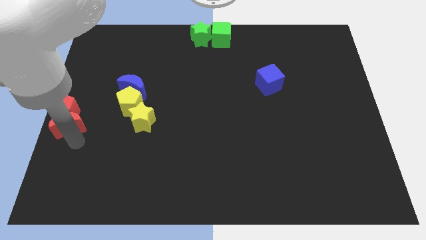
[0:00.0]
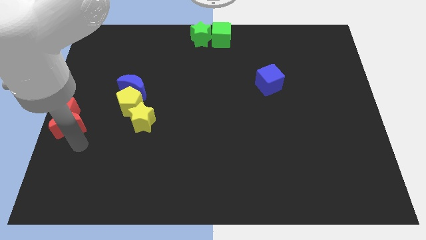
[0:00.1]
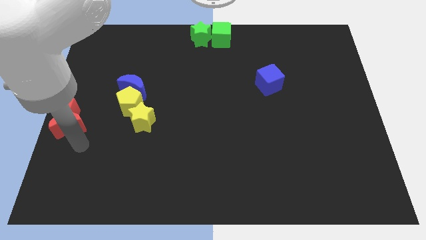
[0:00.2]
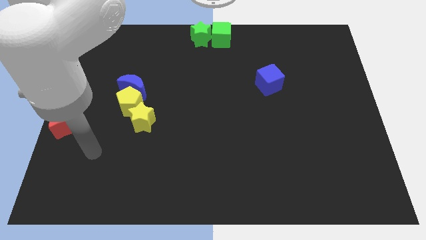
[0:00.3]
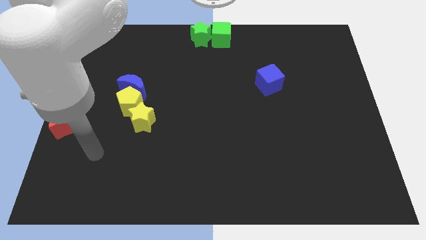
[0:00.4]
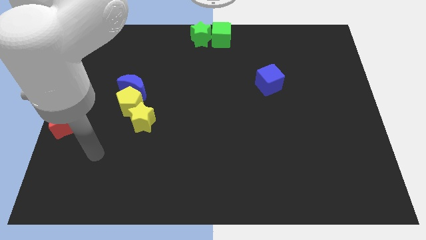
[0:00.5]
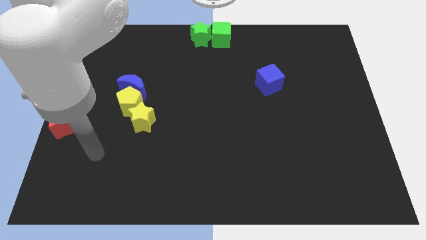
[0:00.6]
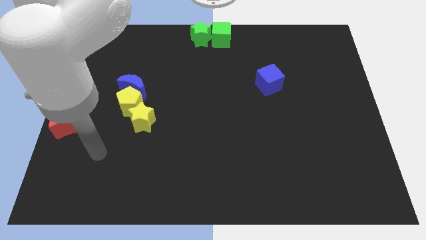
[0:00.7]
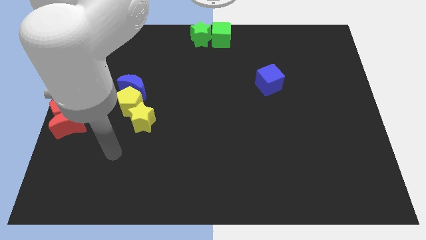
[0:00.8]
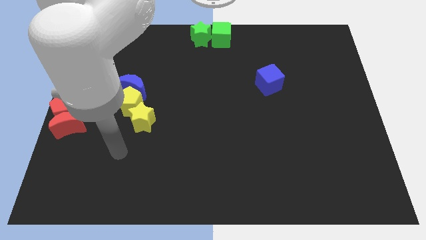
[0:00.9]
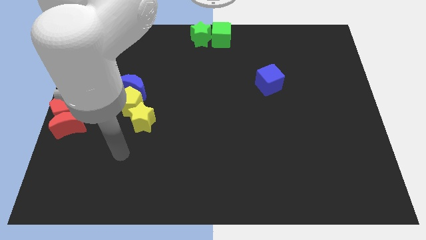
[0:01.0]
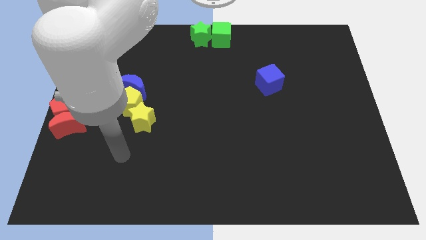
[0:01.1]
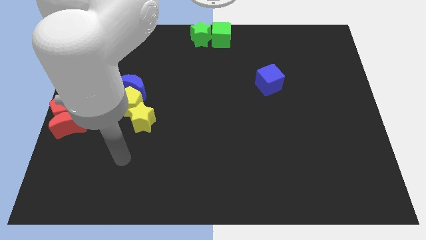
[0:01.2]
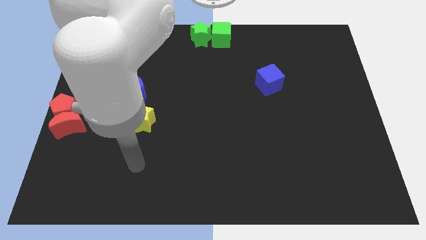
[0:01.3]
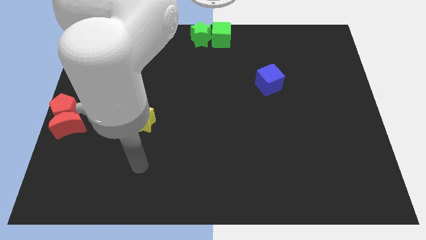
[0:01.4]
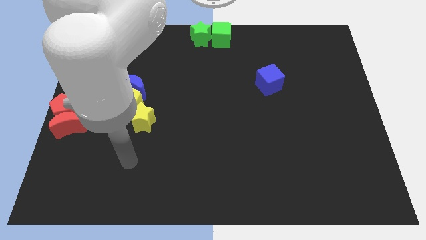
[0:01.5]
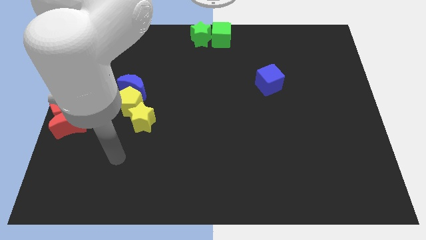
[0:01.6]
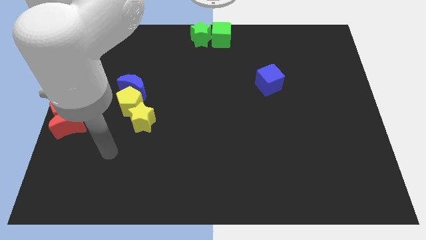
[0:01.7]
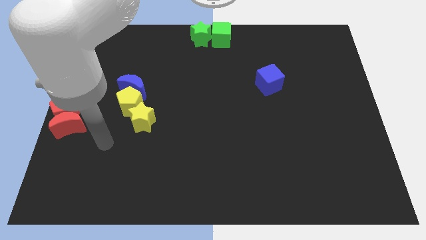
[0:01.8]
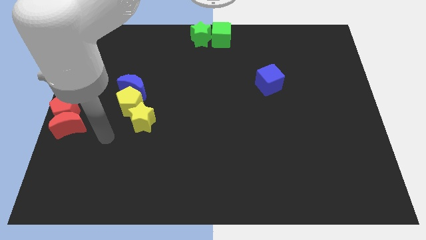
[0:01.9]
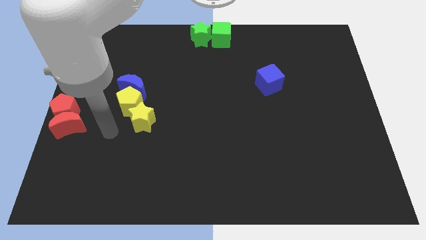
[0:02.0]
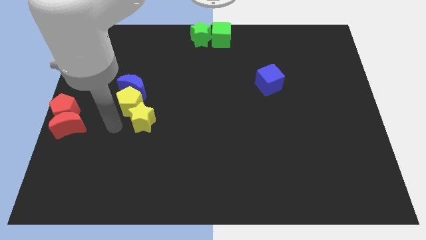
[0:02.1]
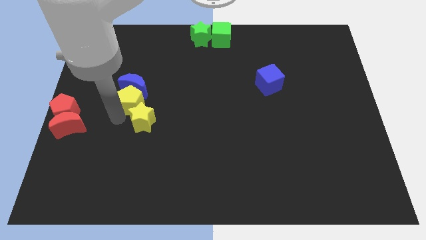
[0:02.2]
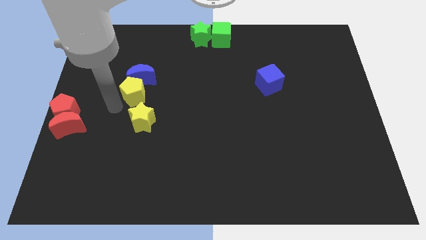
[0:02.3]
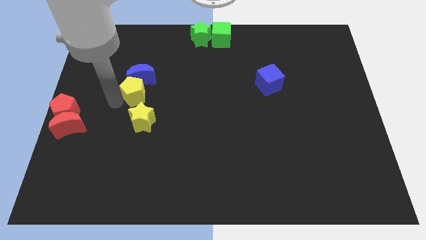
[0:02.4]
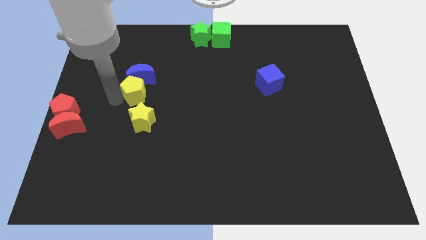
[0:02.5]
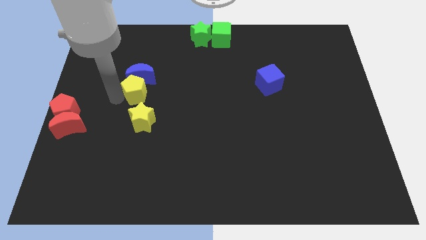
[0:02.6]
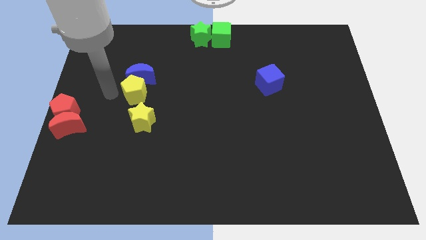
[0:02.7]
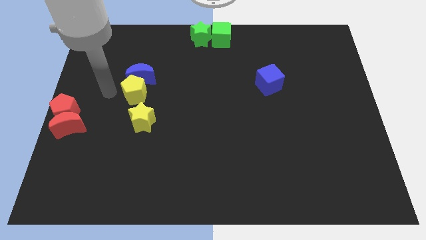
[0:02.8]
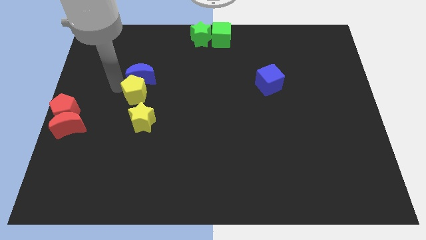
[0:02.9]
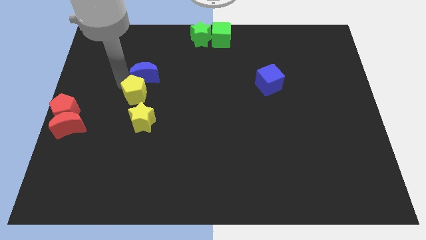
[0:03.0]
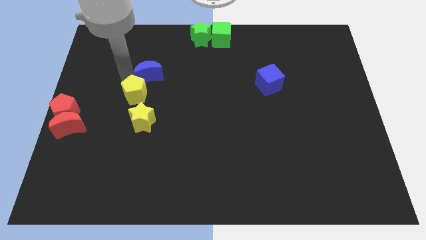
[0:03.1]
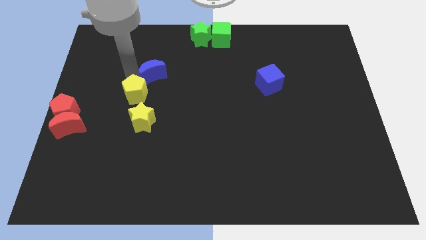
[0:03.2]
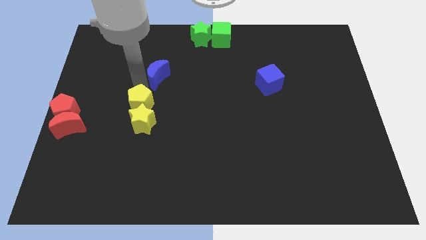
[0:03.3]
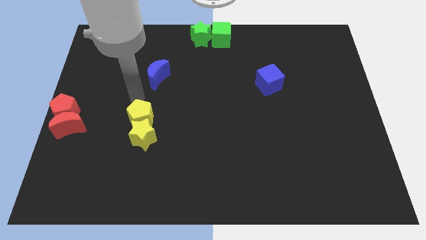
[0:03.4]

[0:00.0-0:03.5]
push the yellow pentagon into the blue moon

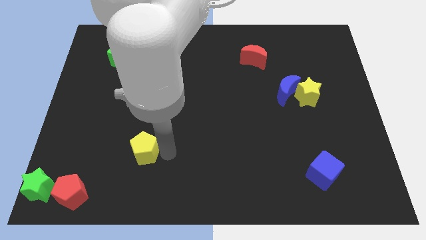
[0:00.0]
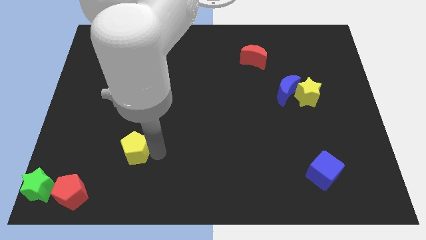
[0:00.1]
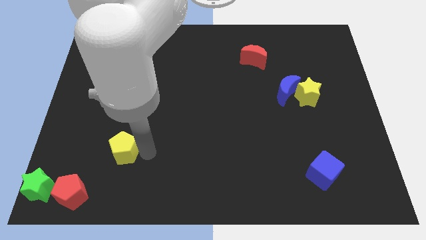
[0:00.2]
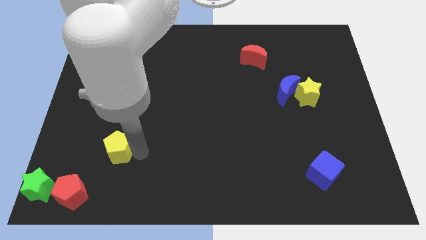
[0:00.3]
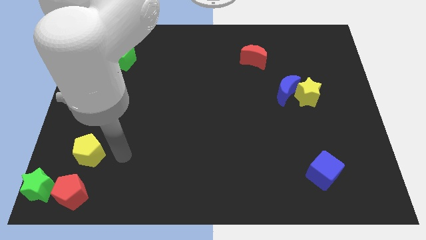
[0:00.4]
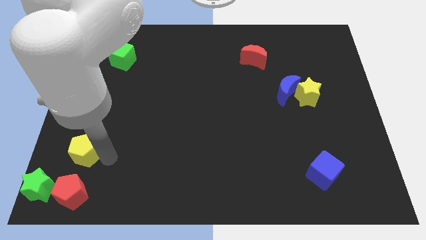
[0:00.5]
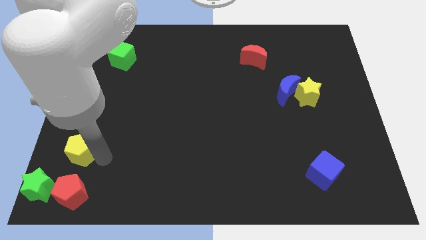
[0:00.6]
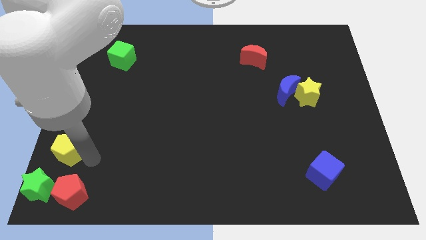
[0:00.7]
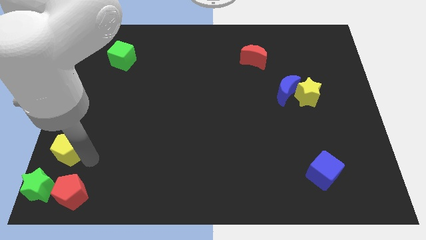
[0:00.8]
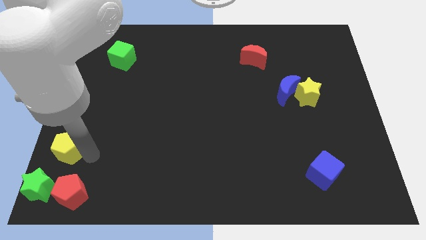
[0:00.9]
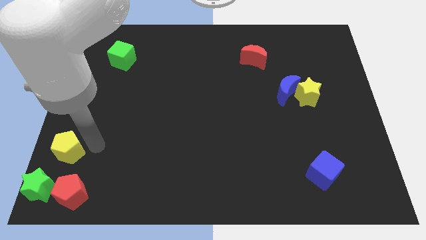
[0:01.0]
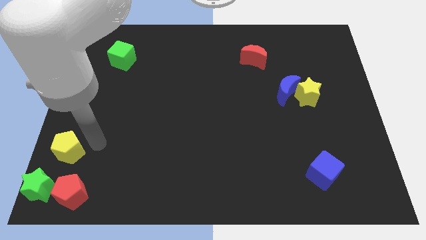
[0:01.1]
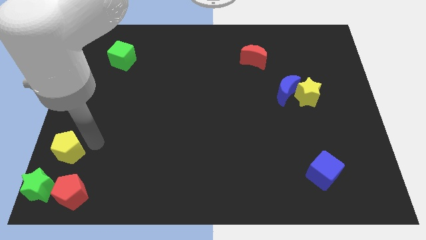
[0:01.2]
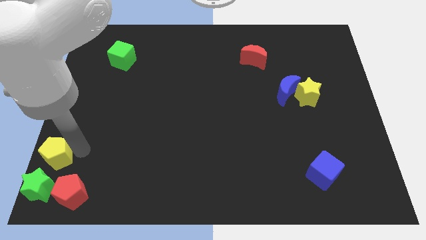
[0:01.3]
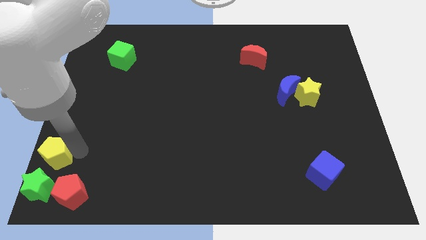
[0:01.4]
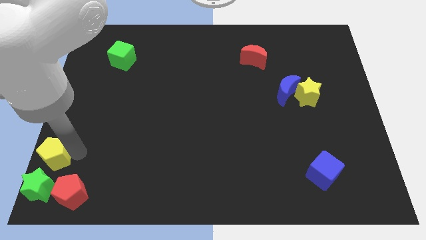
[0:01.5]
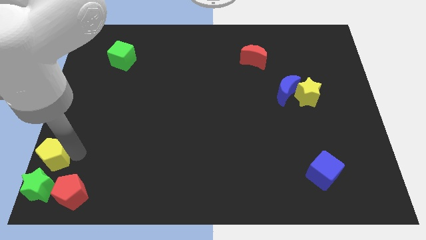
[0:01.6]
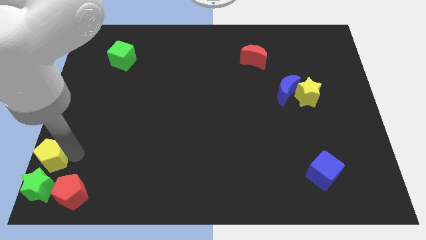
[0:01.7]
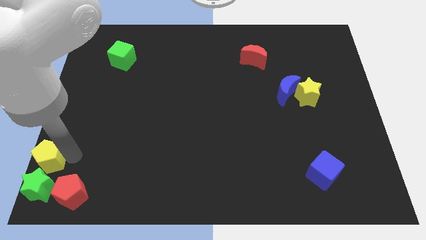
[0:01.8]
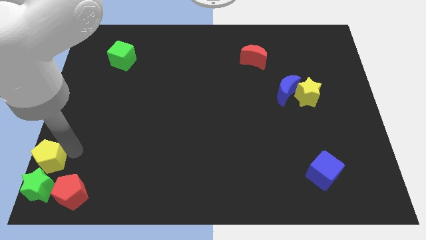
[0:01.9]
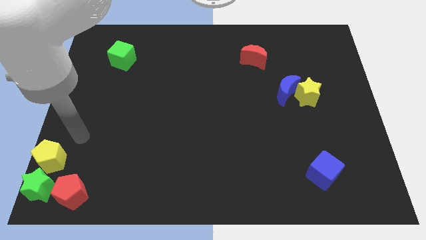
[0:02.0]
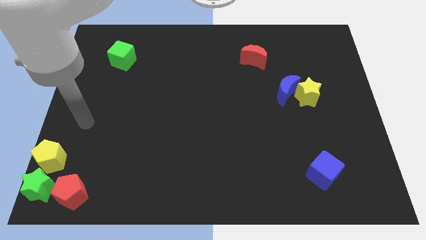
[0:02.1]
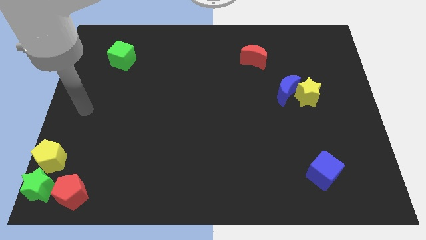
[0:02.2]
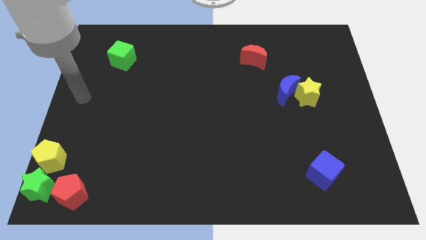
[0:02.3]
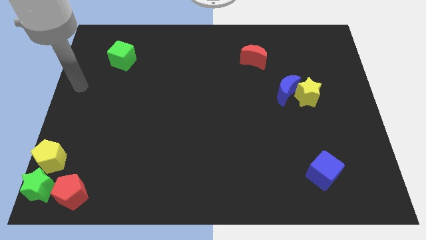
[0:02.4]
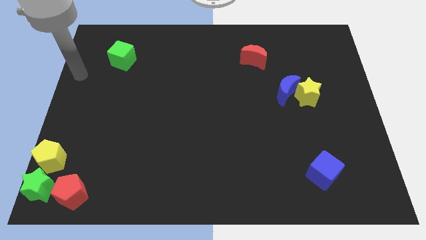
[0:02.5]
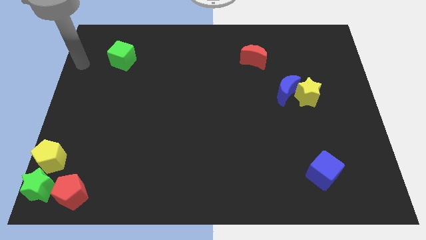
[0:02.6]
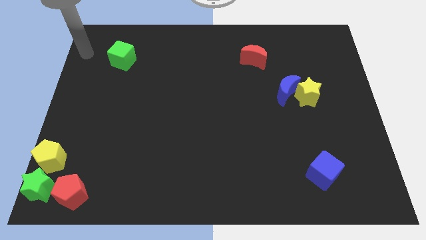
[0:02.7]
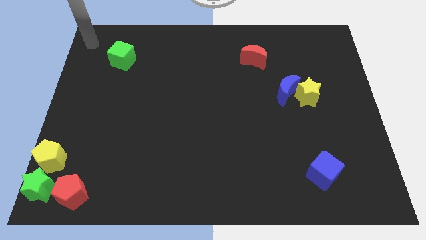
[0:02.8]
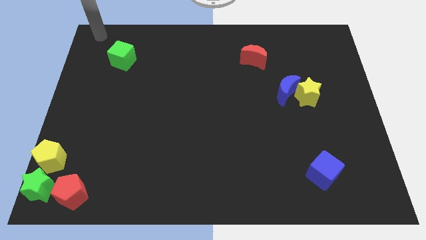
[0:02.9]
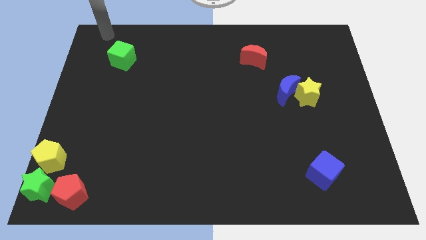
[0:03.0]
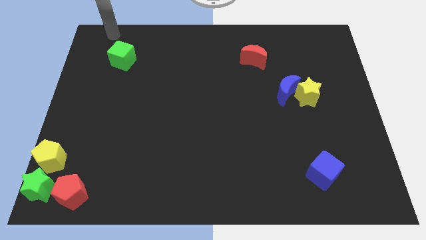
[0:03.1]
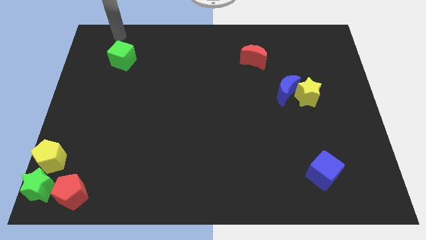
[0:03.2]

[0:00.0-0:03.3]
place the yellow pentagon above the green star

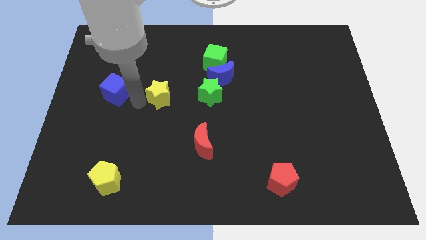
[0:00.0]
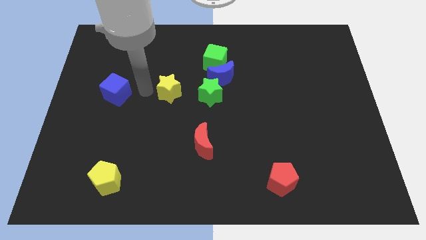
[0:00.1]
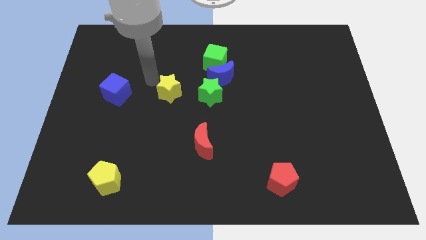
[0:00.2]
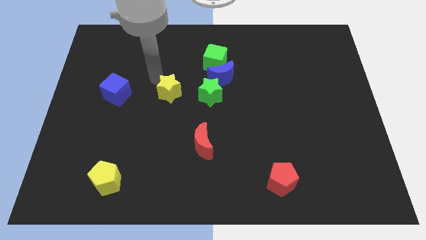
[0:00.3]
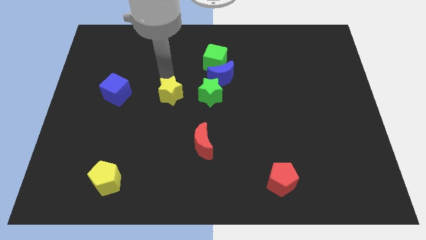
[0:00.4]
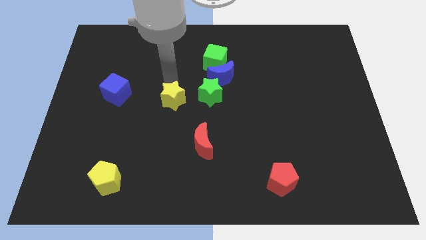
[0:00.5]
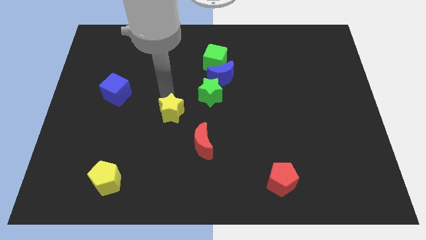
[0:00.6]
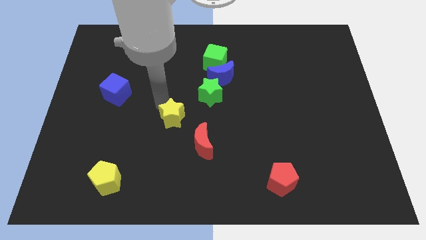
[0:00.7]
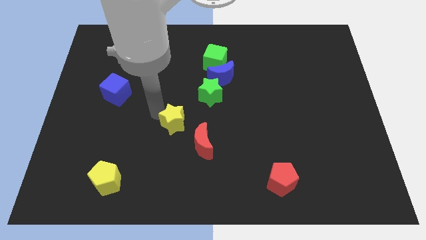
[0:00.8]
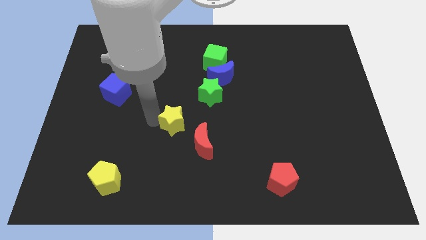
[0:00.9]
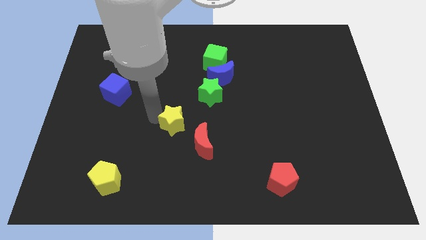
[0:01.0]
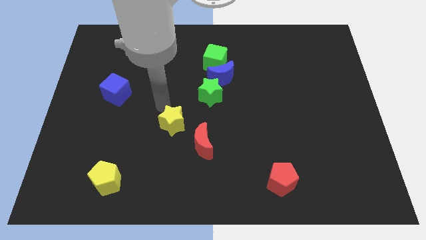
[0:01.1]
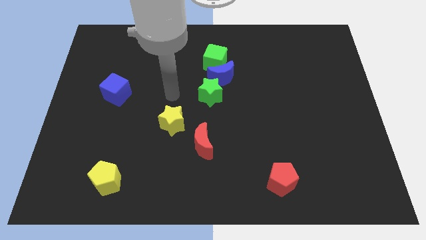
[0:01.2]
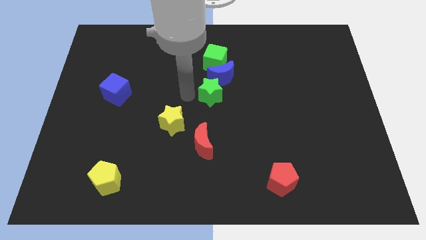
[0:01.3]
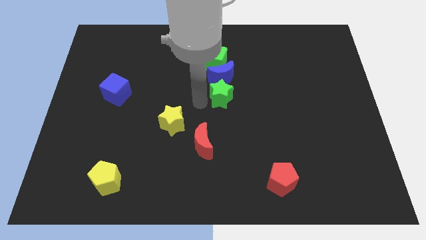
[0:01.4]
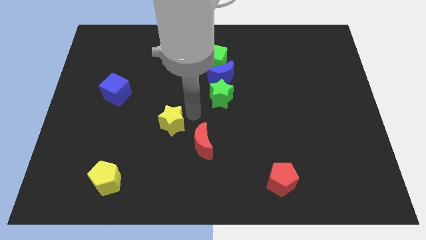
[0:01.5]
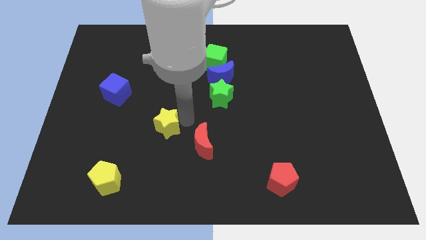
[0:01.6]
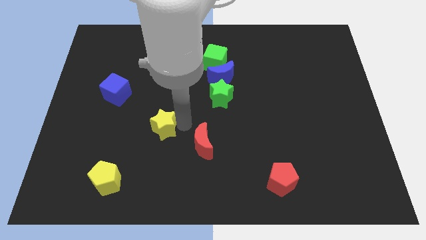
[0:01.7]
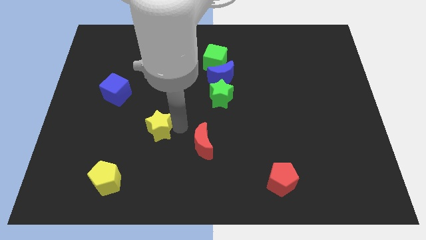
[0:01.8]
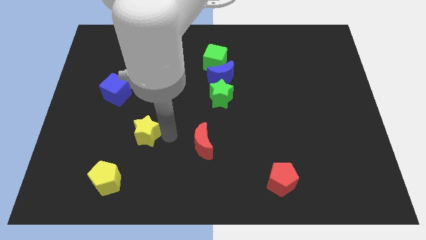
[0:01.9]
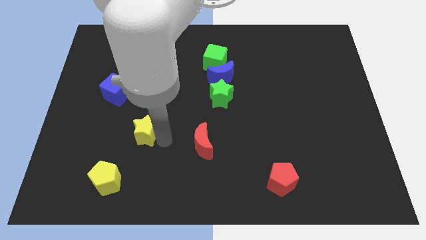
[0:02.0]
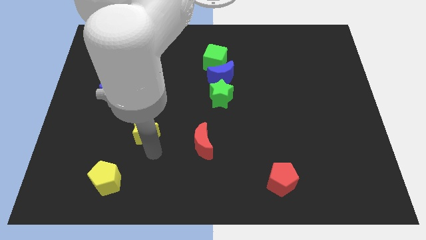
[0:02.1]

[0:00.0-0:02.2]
place the yellow star to the left of the red crescent

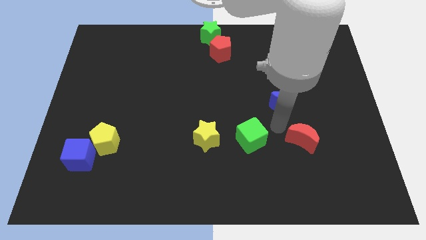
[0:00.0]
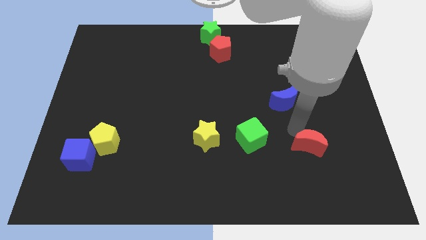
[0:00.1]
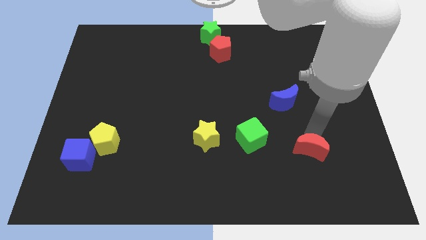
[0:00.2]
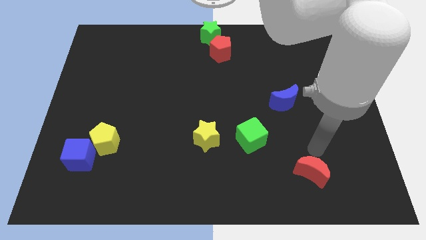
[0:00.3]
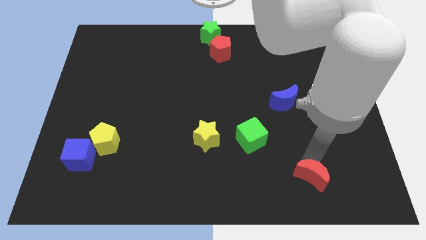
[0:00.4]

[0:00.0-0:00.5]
push the red crescent to the bottom center
